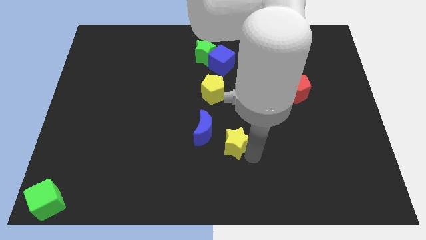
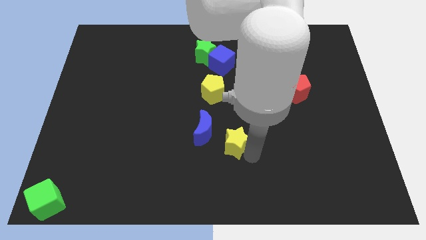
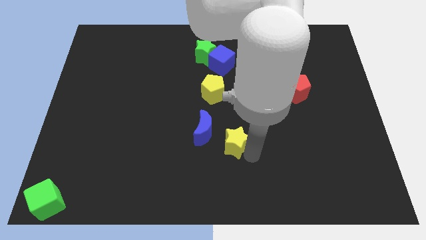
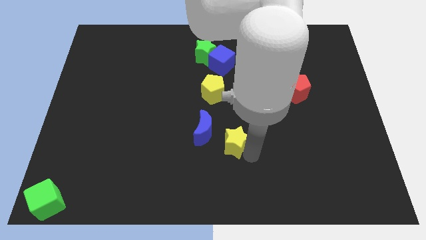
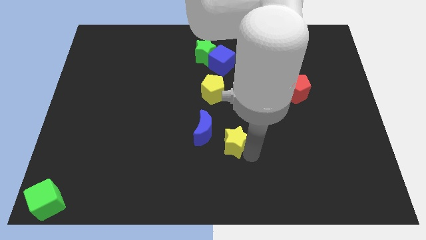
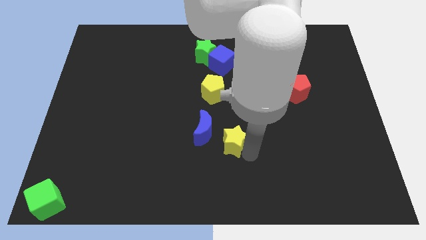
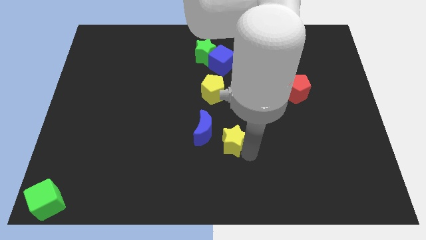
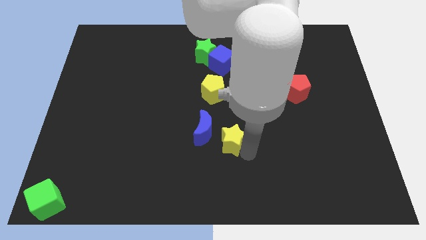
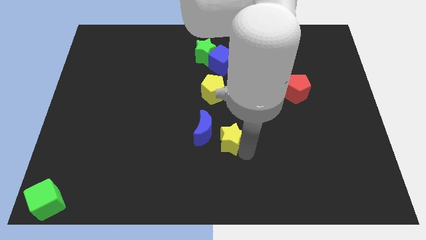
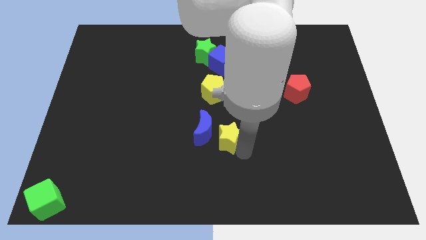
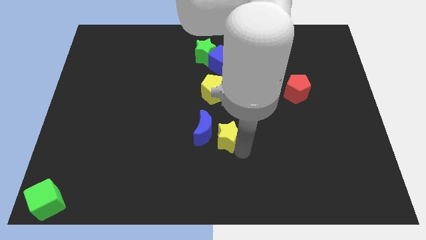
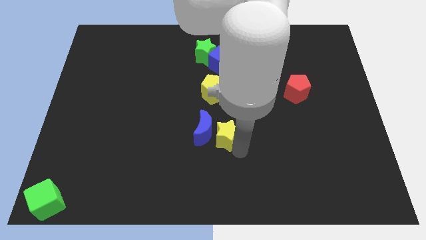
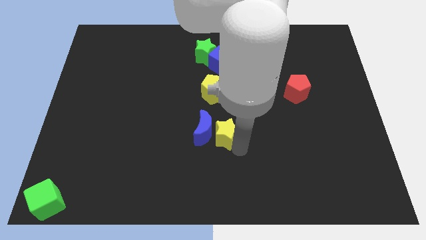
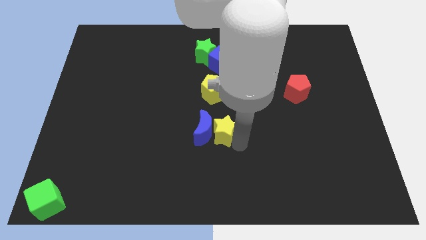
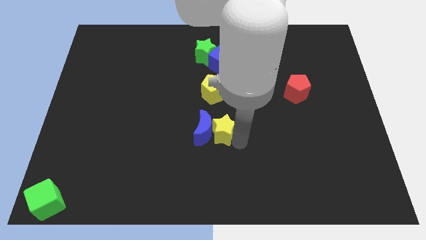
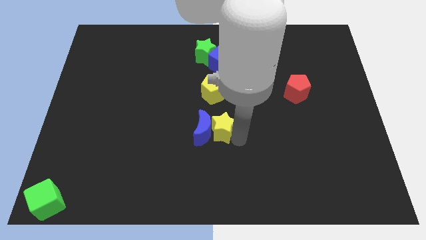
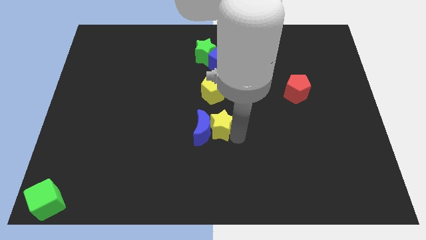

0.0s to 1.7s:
push the yellow star towards the blue moon

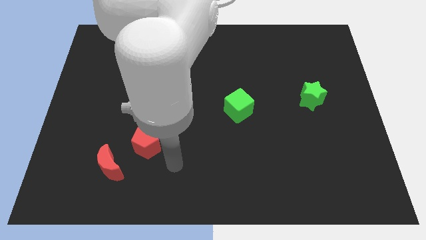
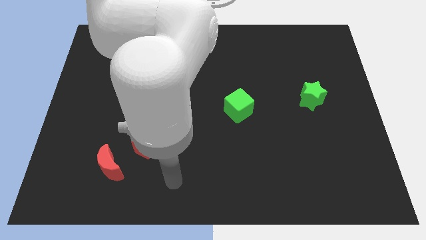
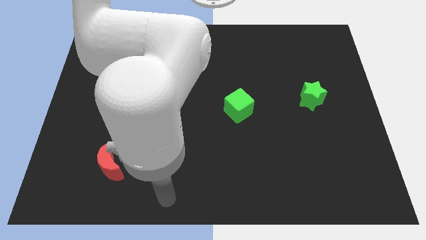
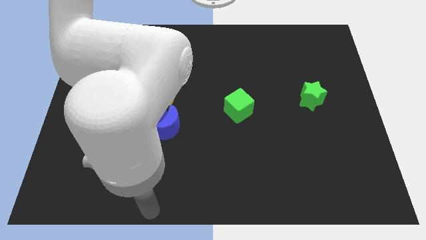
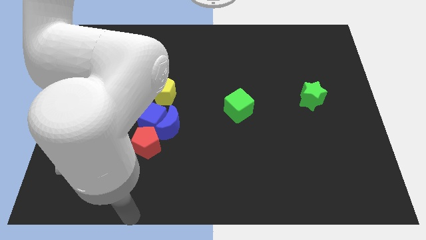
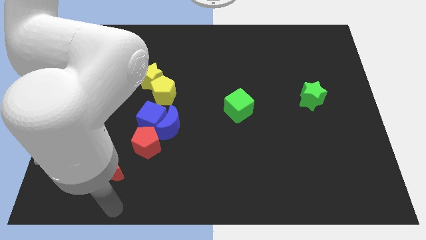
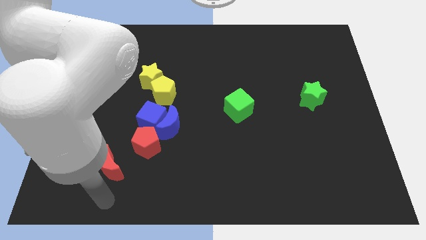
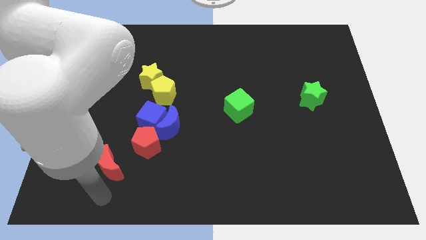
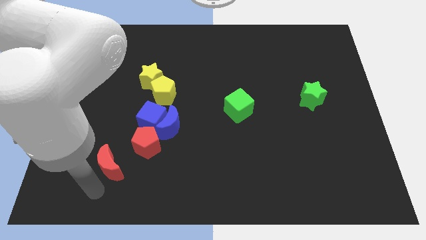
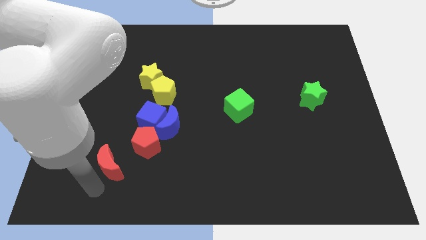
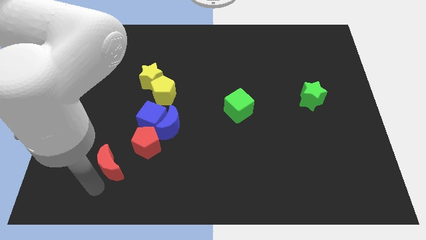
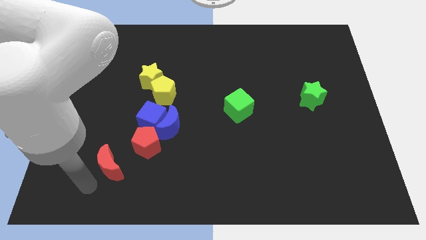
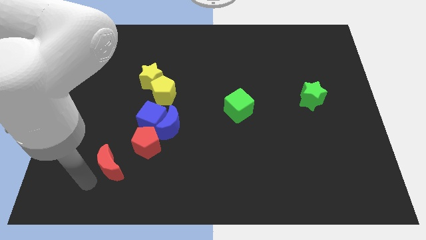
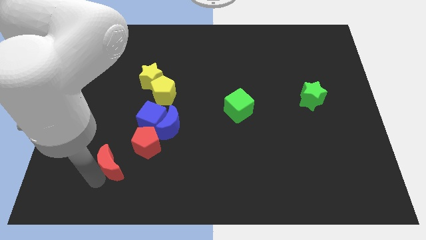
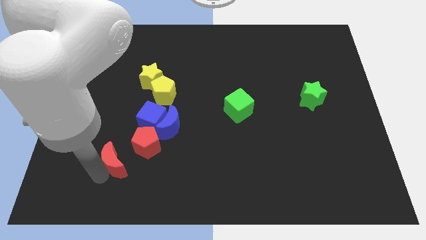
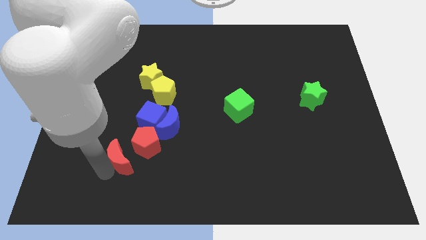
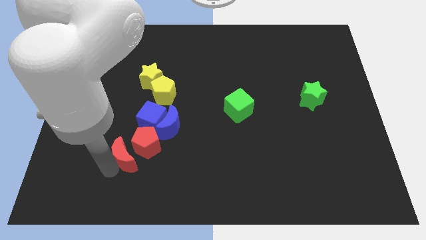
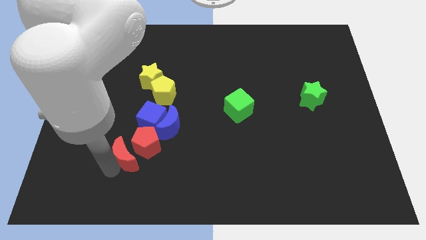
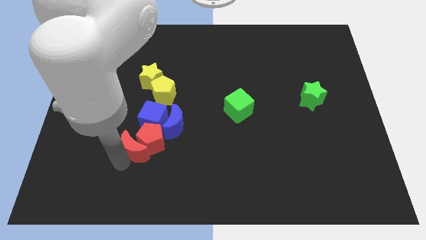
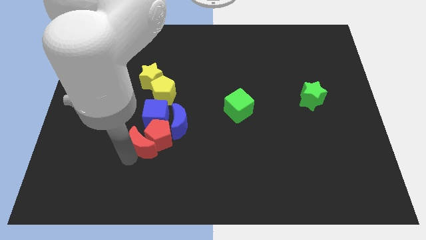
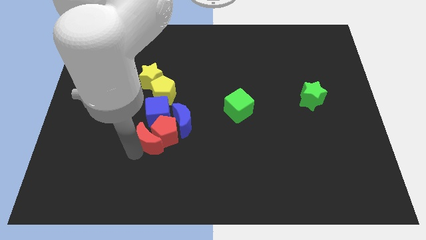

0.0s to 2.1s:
push the red crescent into the group of blocks

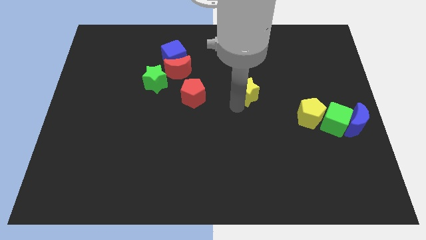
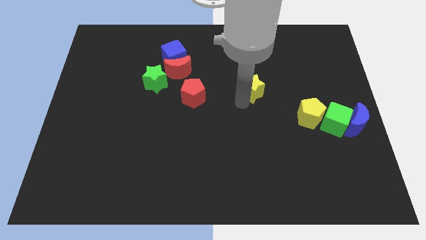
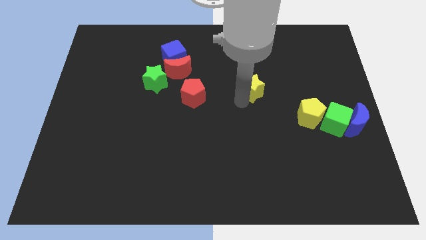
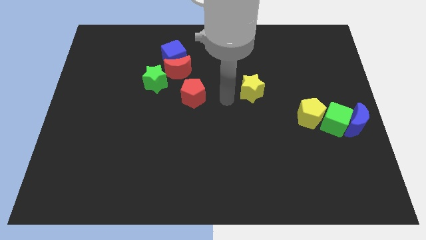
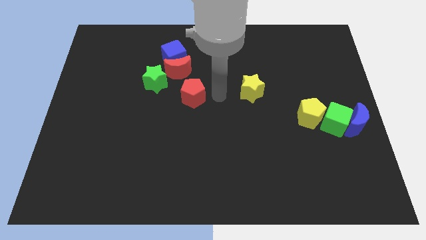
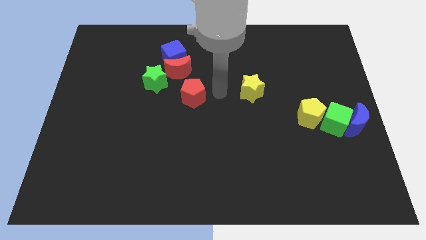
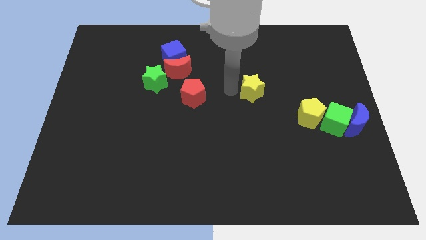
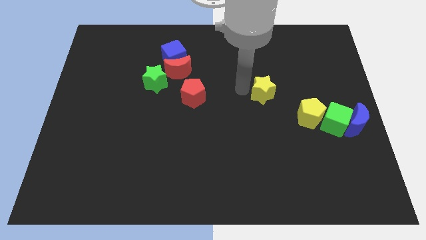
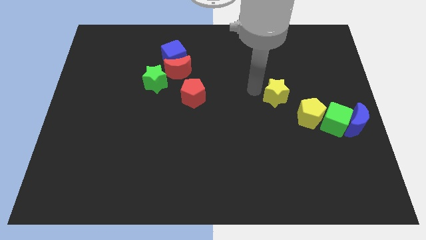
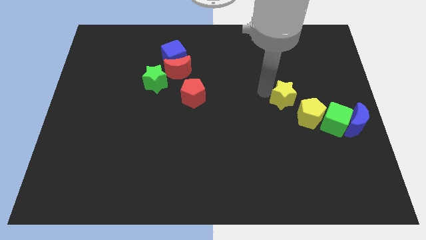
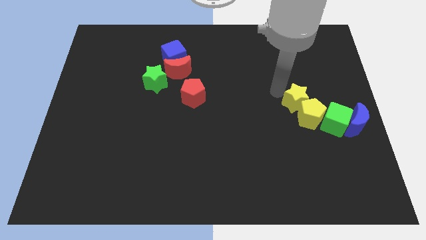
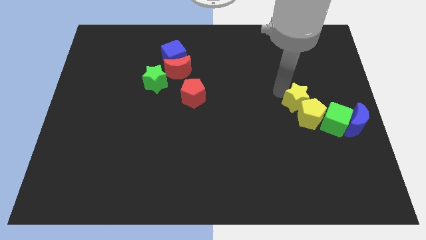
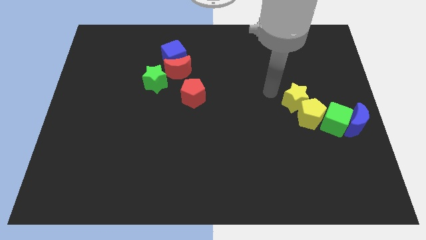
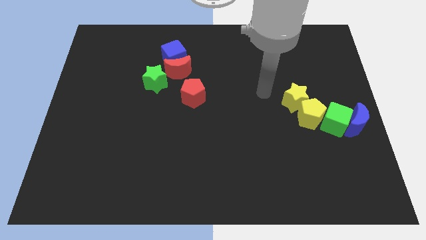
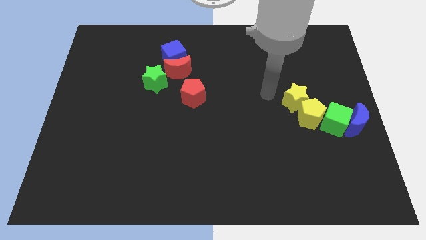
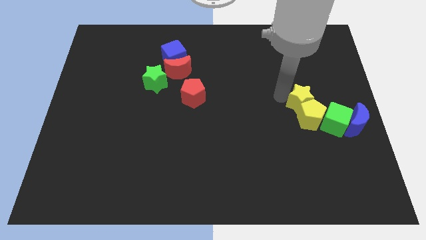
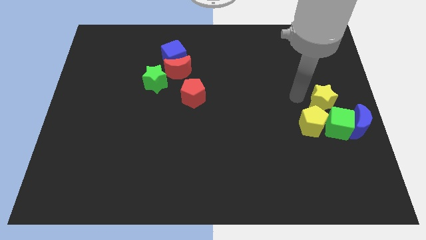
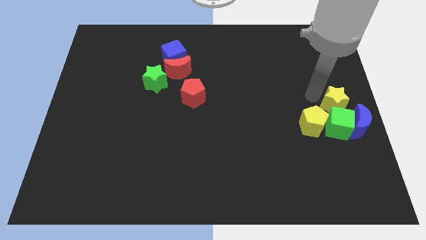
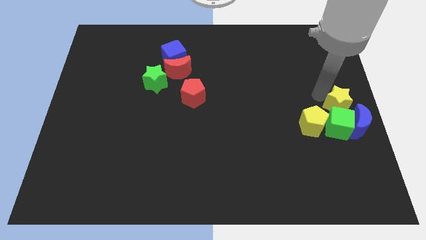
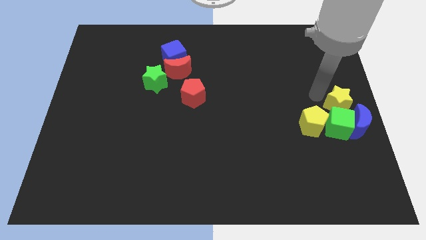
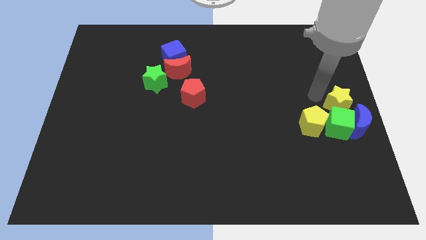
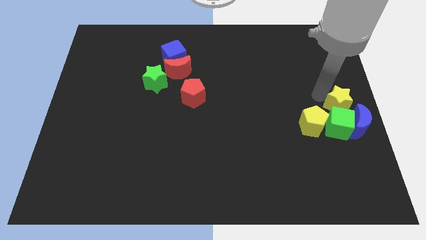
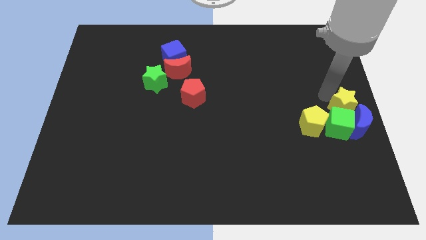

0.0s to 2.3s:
push yellow star above green cube

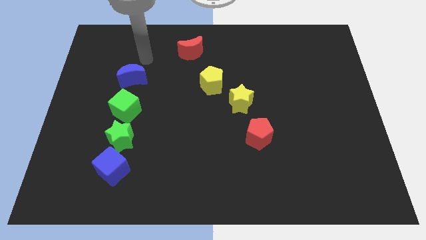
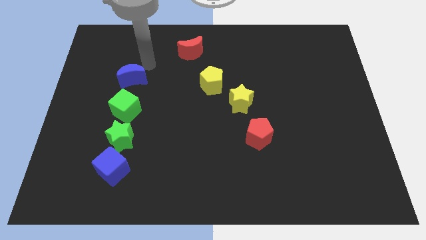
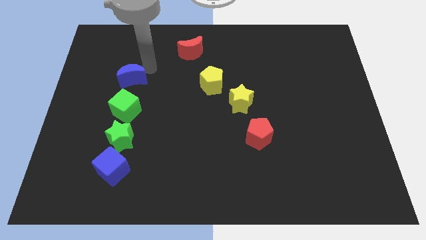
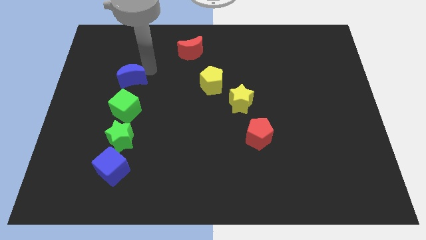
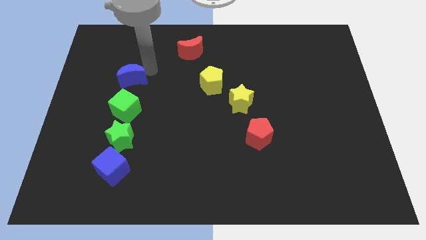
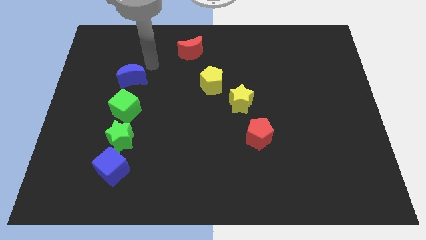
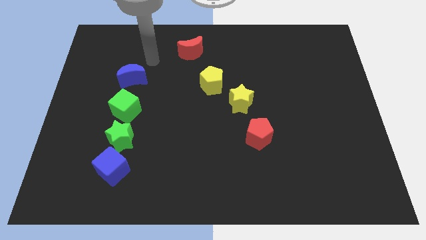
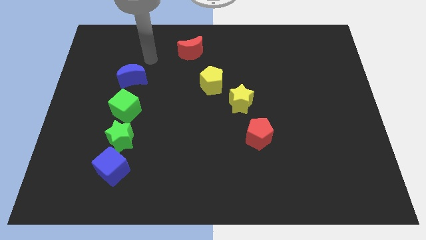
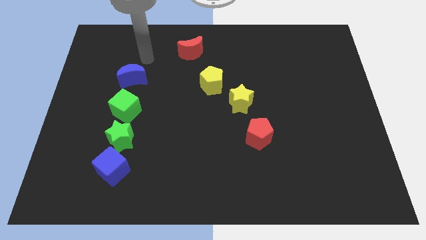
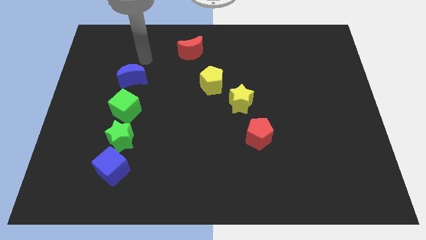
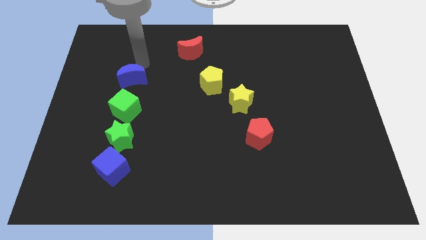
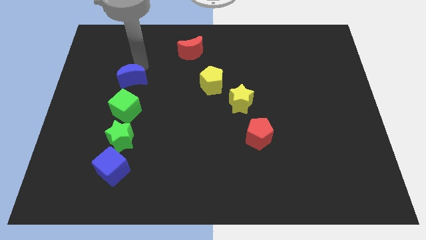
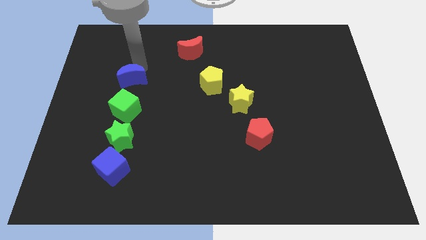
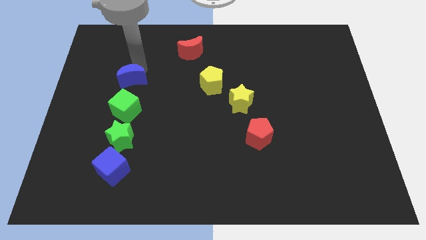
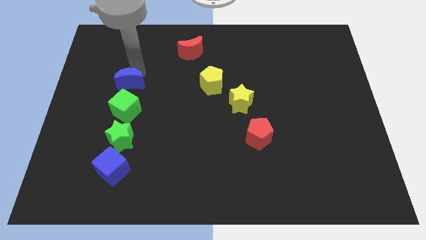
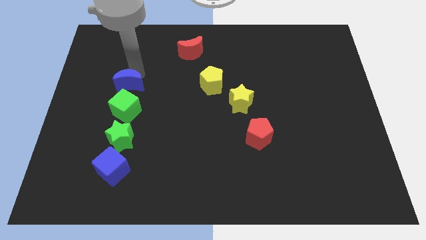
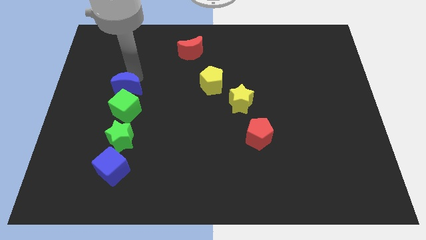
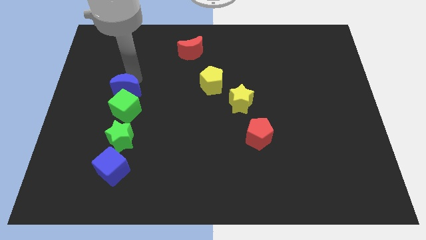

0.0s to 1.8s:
move the blue crescent towards the top side of the green cube

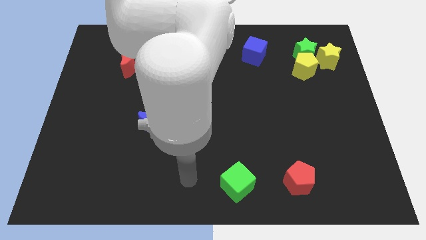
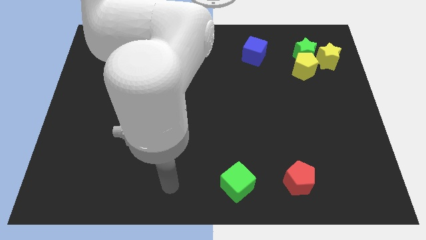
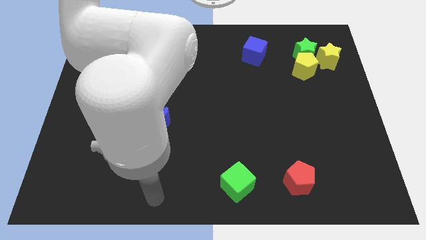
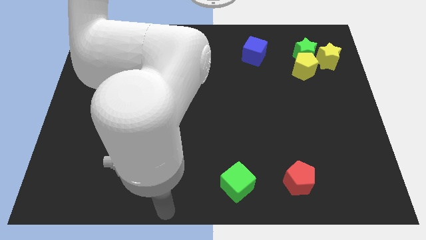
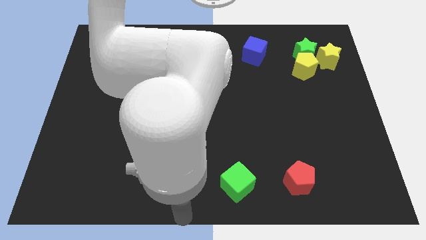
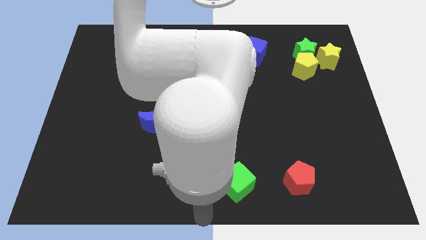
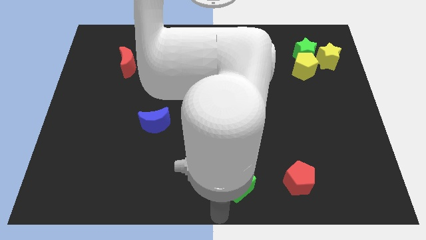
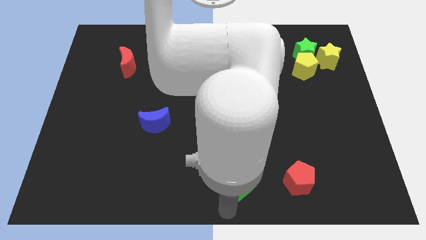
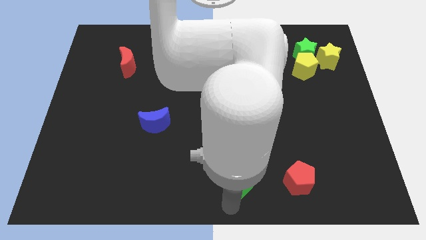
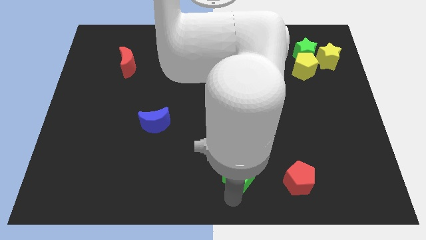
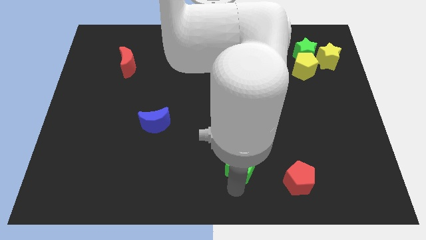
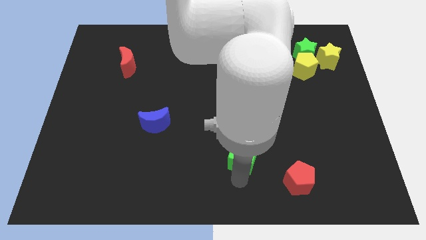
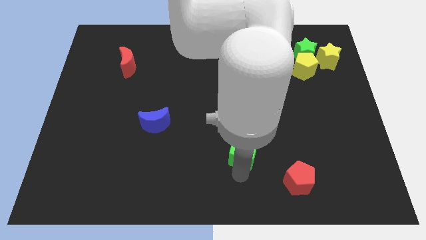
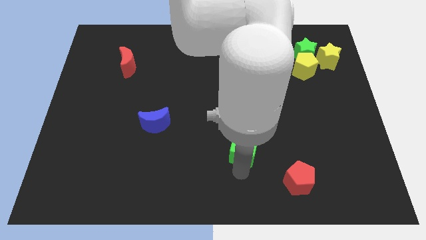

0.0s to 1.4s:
push the green cube slightly to the top side of the board
